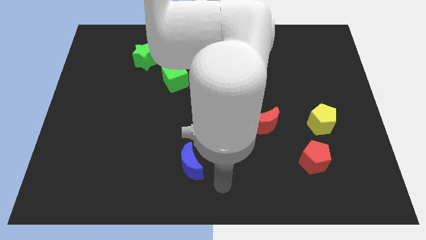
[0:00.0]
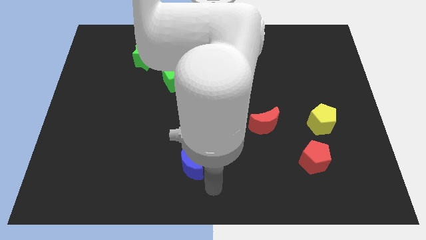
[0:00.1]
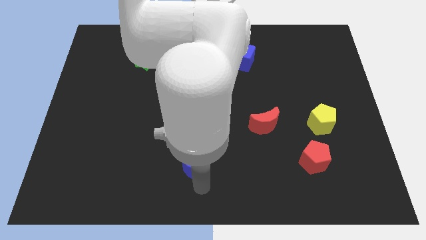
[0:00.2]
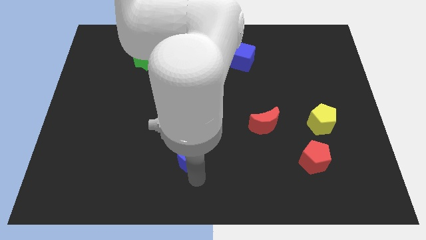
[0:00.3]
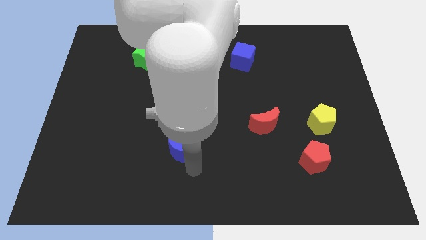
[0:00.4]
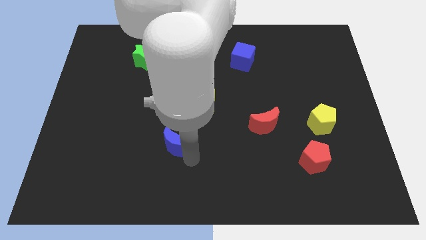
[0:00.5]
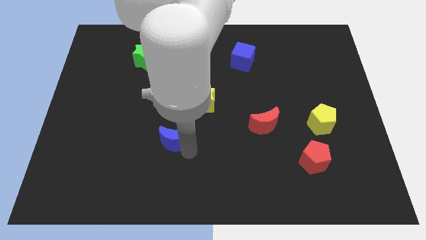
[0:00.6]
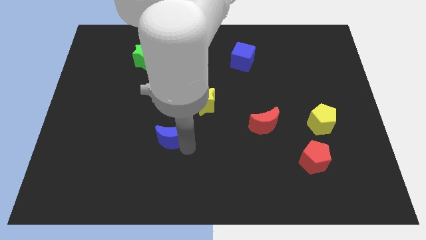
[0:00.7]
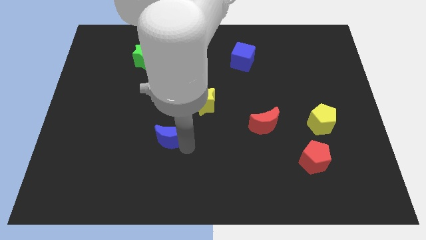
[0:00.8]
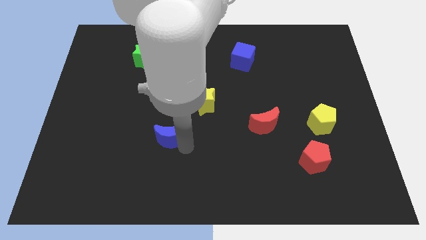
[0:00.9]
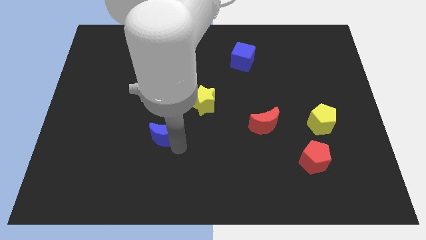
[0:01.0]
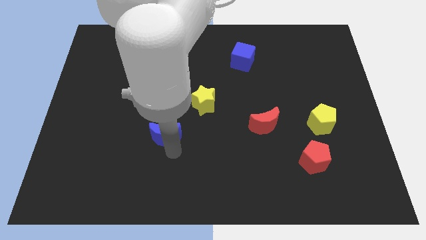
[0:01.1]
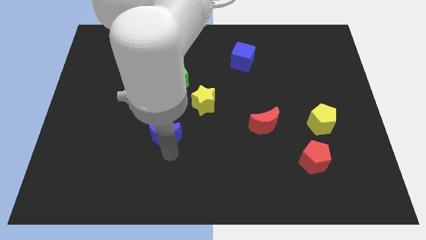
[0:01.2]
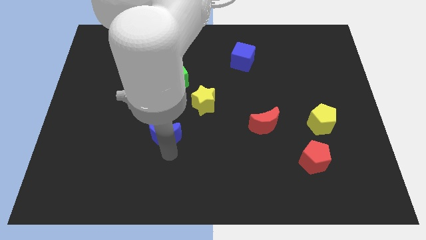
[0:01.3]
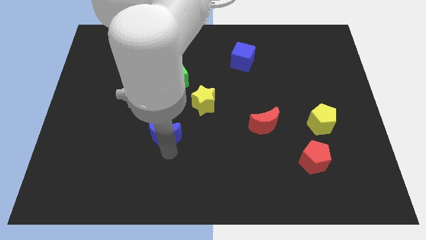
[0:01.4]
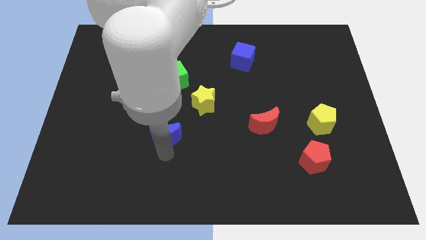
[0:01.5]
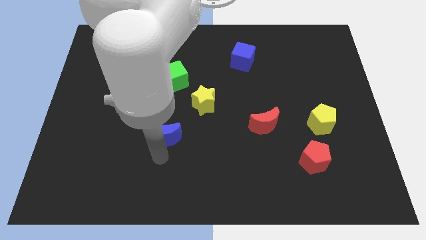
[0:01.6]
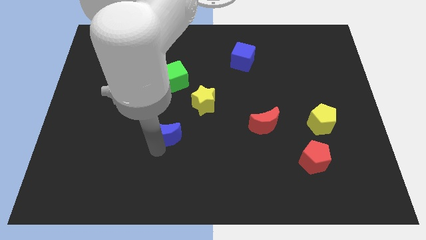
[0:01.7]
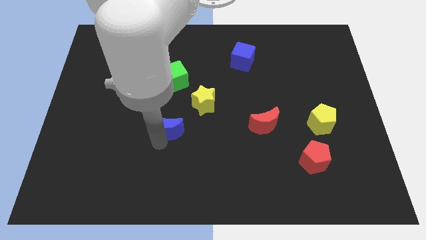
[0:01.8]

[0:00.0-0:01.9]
put the blue crescent below the green cube

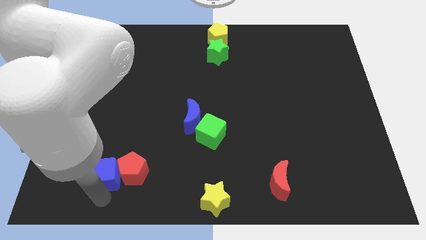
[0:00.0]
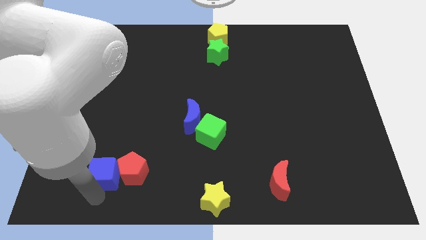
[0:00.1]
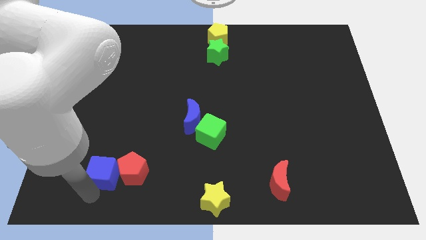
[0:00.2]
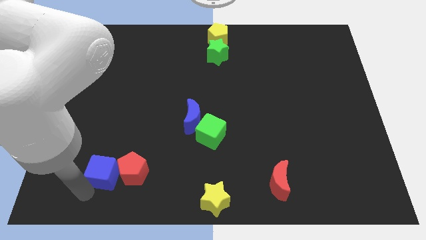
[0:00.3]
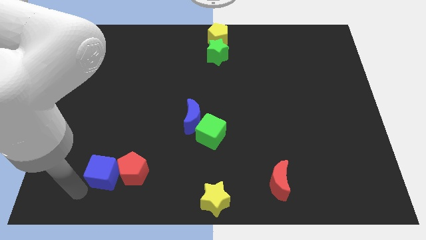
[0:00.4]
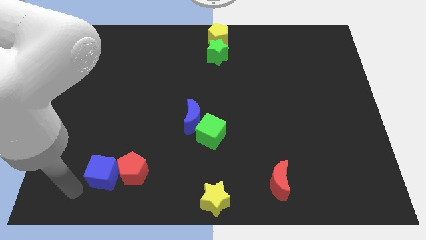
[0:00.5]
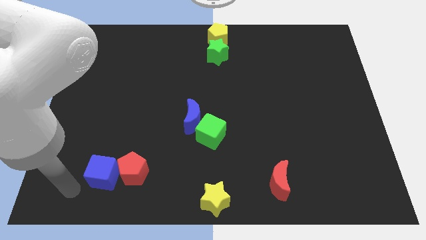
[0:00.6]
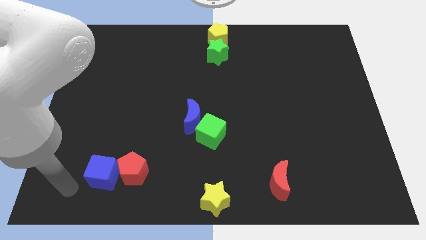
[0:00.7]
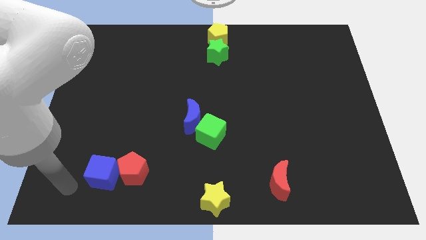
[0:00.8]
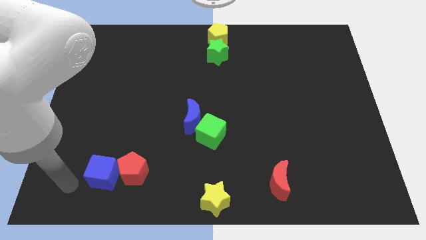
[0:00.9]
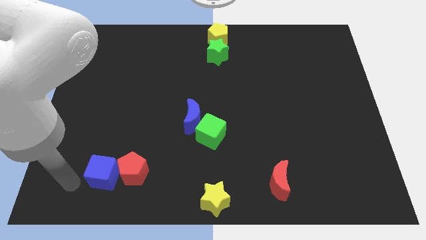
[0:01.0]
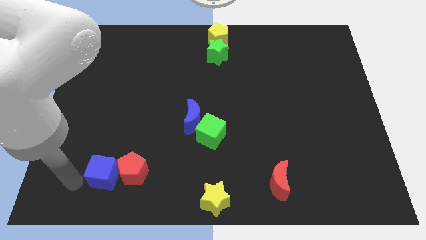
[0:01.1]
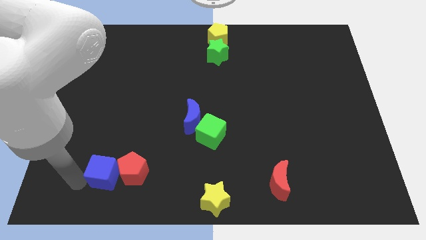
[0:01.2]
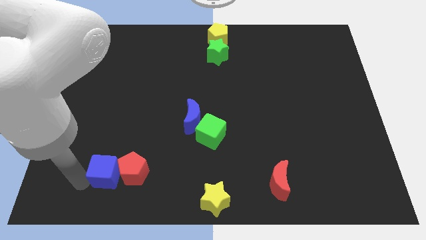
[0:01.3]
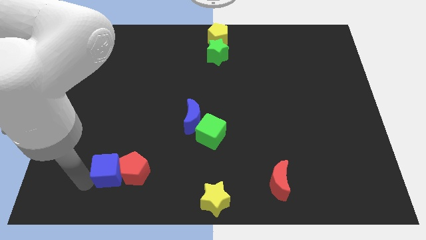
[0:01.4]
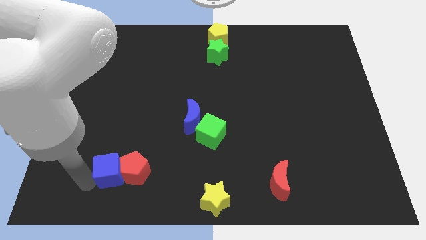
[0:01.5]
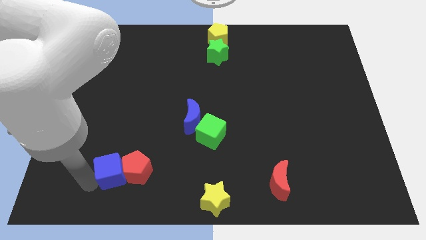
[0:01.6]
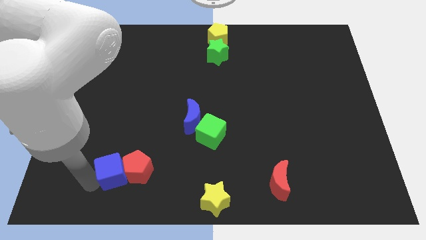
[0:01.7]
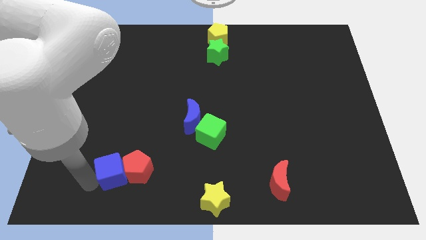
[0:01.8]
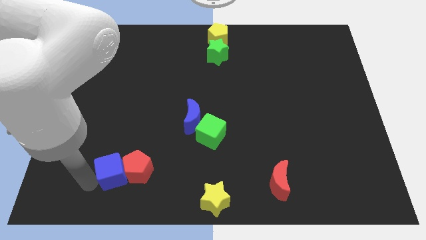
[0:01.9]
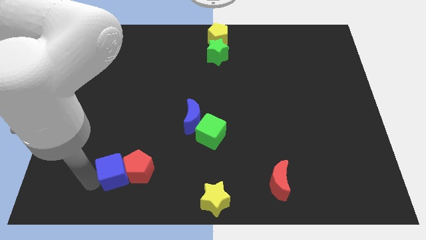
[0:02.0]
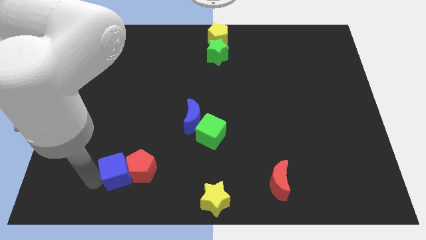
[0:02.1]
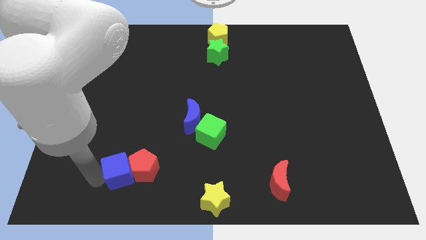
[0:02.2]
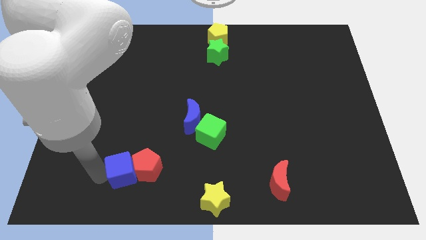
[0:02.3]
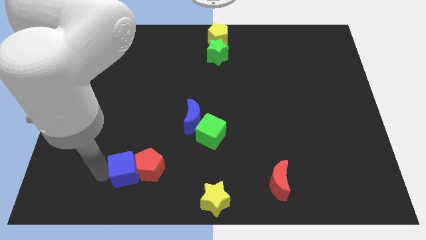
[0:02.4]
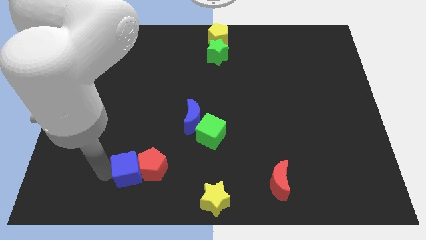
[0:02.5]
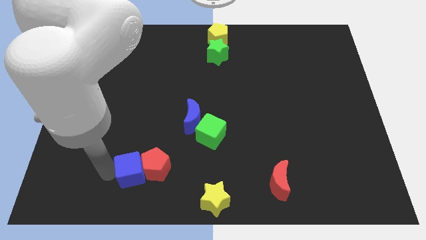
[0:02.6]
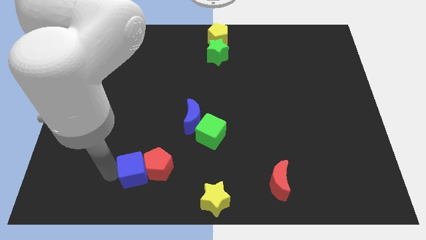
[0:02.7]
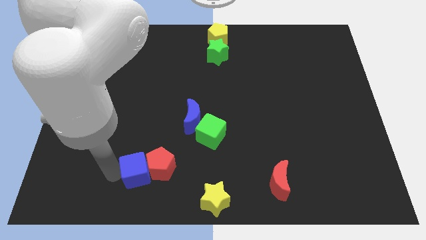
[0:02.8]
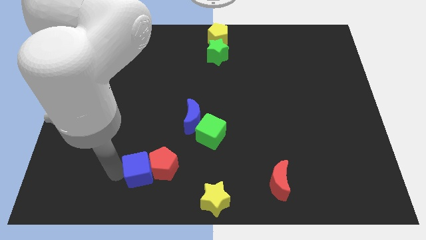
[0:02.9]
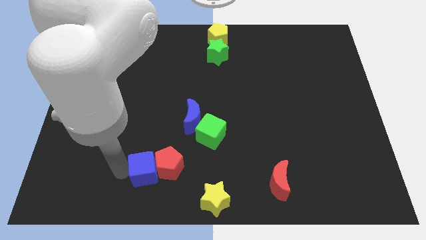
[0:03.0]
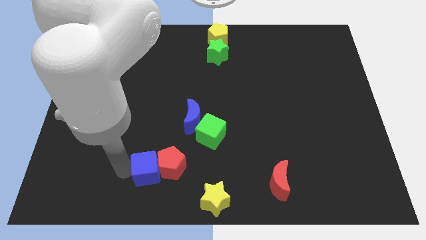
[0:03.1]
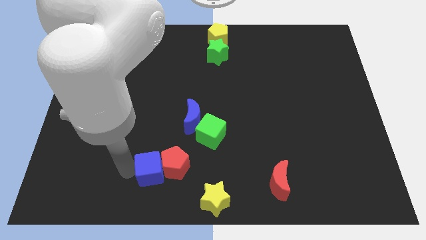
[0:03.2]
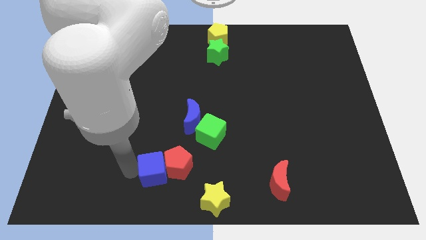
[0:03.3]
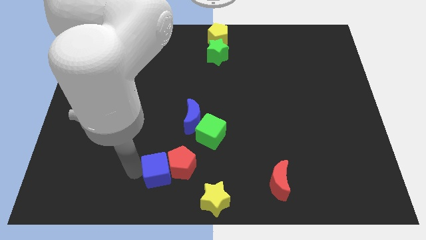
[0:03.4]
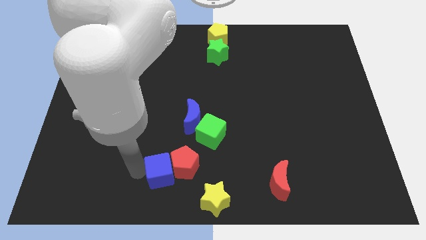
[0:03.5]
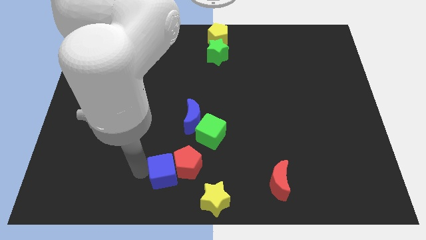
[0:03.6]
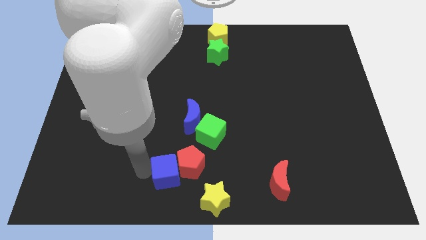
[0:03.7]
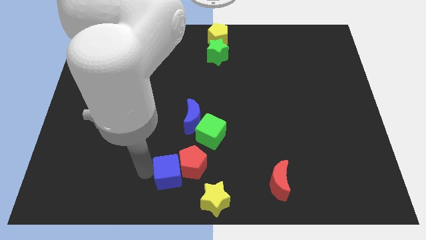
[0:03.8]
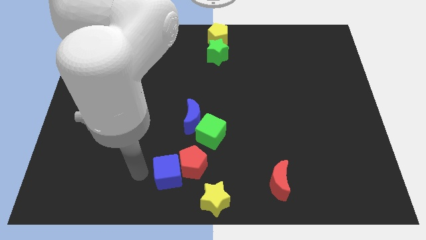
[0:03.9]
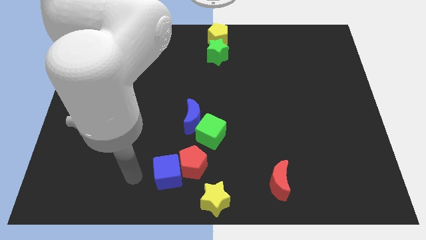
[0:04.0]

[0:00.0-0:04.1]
push the red pentagon and blue cube diagonal below

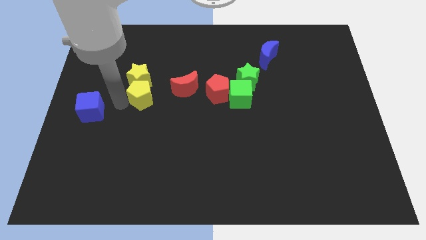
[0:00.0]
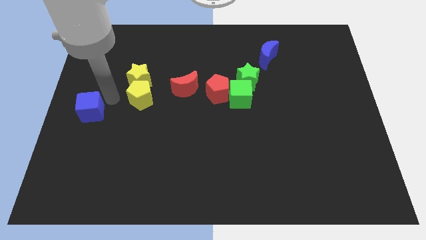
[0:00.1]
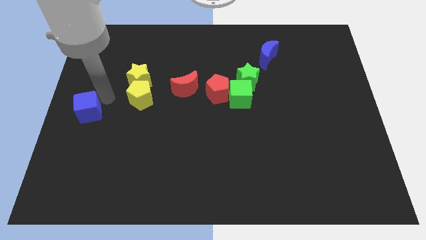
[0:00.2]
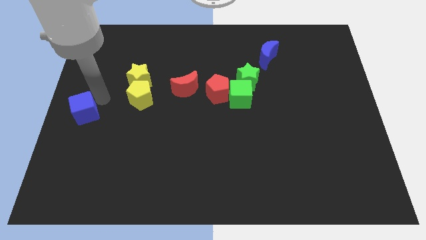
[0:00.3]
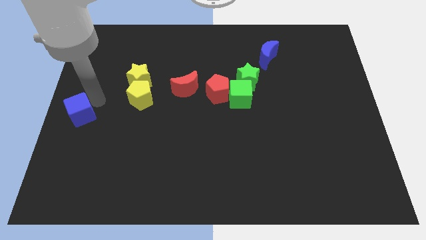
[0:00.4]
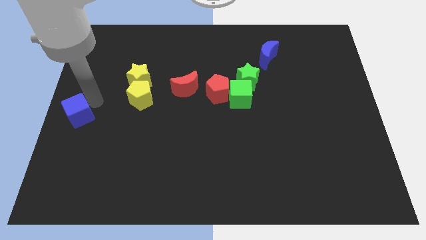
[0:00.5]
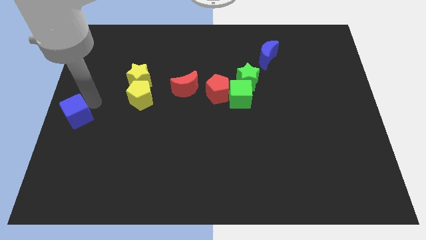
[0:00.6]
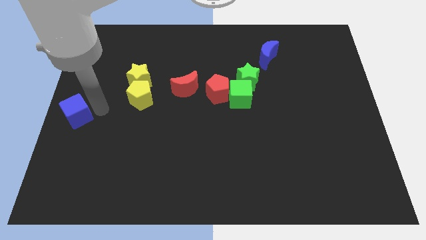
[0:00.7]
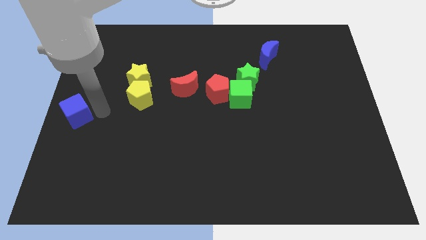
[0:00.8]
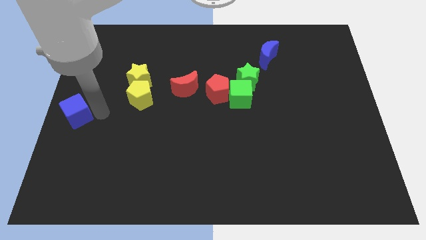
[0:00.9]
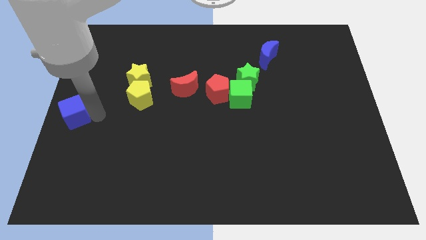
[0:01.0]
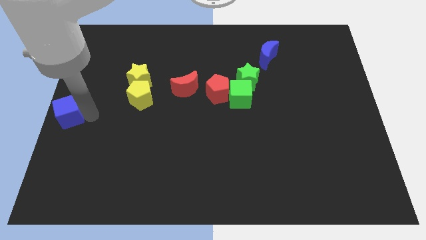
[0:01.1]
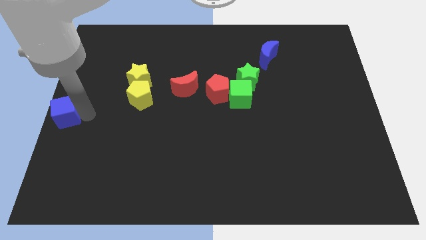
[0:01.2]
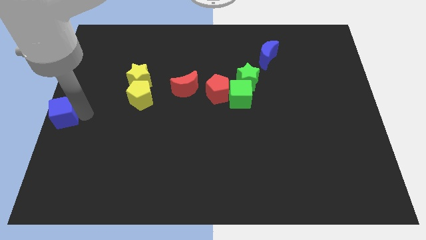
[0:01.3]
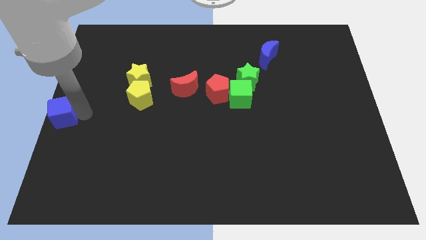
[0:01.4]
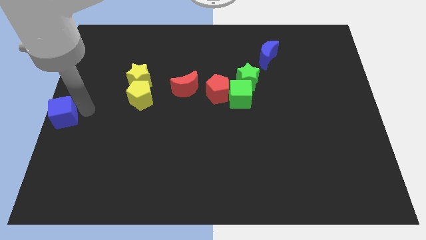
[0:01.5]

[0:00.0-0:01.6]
push the blue cube towards the left center of the board

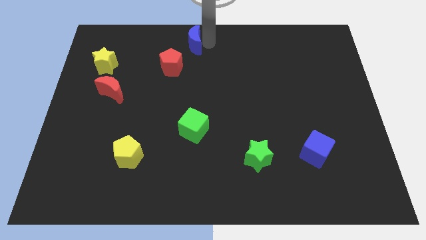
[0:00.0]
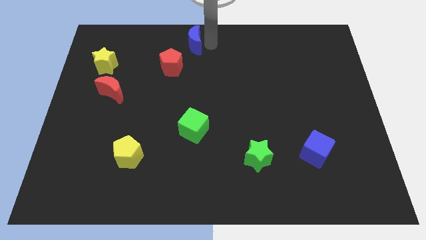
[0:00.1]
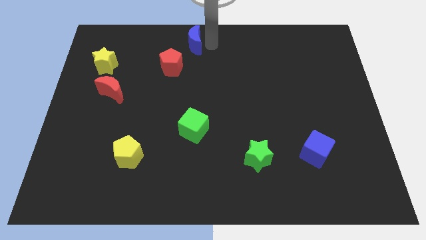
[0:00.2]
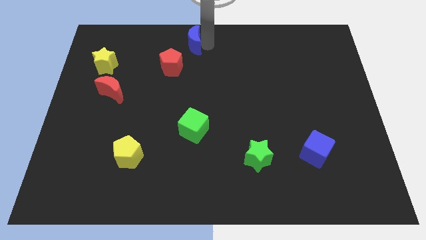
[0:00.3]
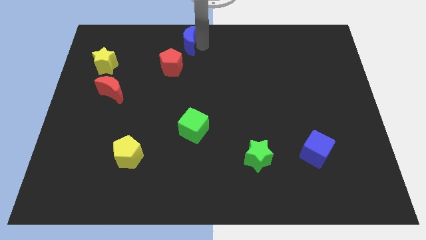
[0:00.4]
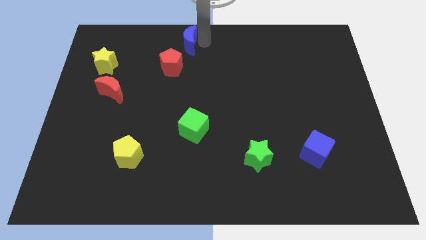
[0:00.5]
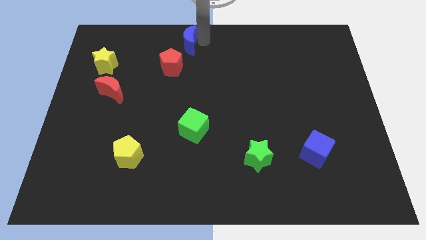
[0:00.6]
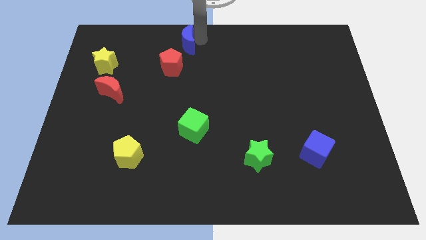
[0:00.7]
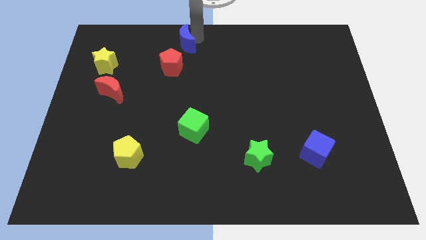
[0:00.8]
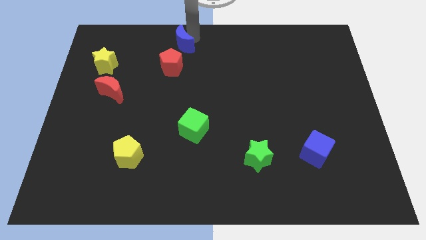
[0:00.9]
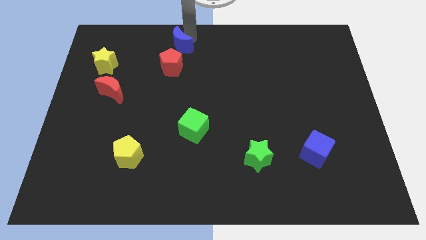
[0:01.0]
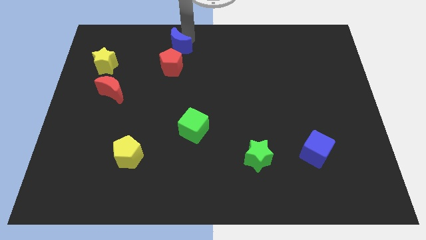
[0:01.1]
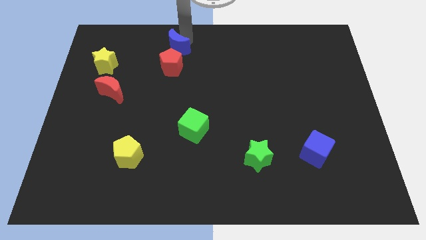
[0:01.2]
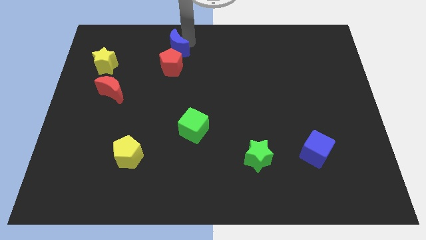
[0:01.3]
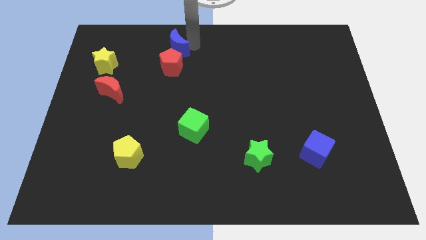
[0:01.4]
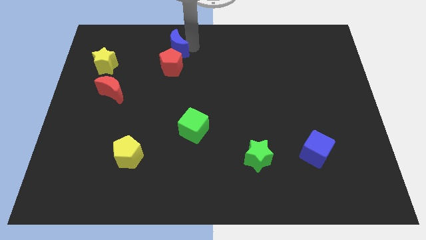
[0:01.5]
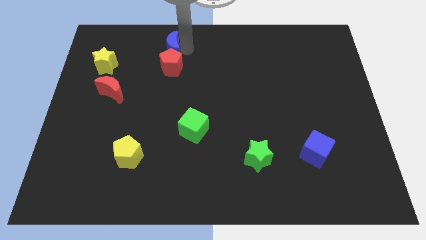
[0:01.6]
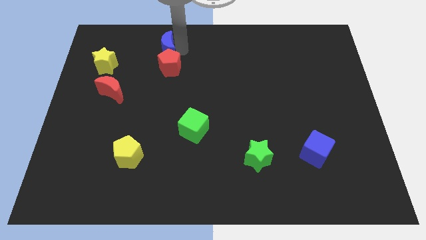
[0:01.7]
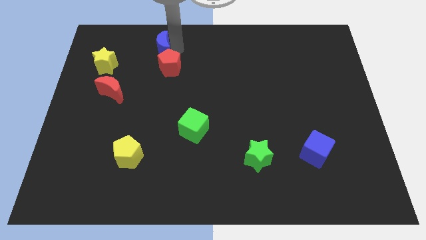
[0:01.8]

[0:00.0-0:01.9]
drag the blue moon into the top side of the red pentagon
